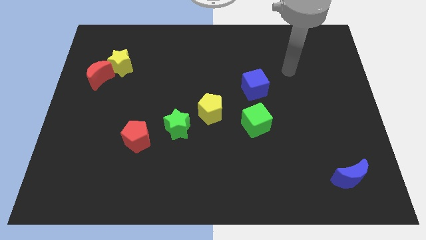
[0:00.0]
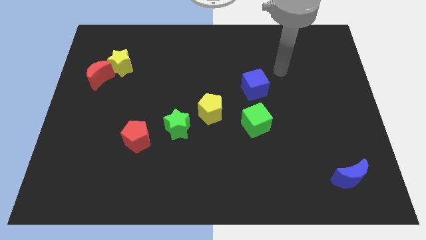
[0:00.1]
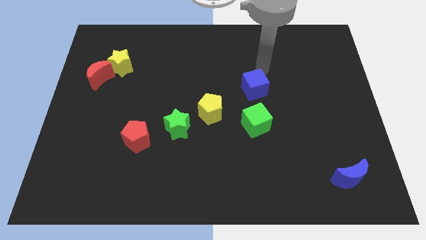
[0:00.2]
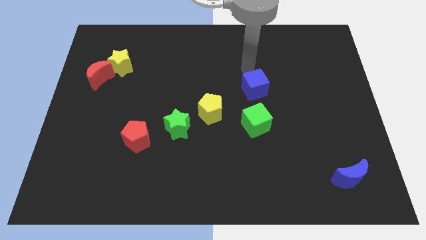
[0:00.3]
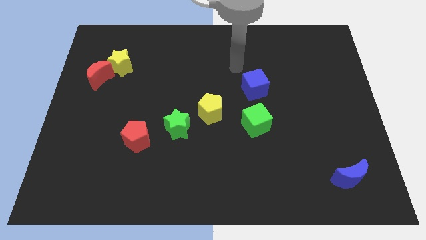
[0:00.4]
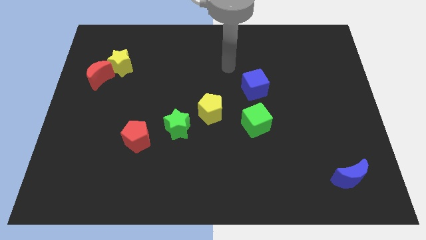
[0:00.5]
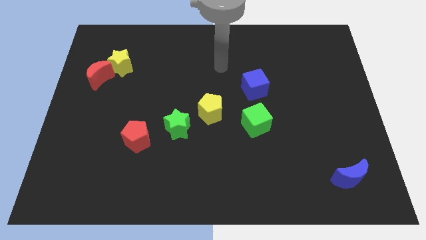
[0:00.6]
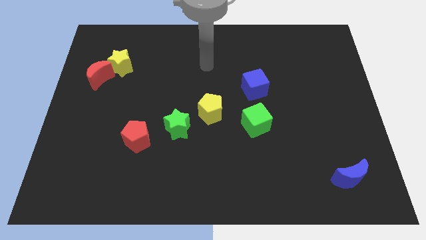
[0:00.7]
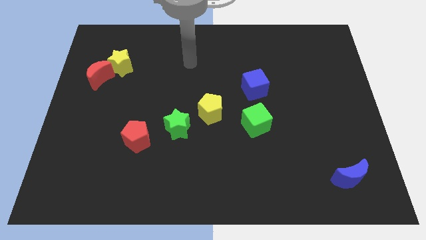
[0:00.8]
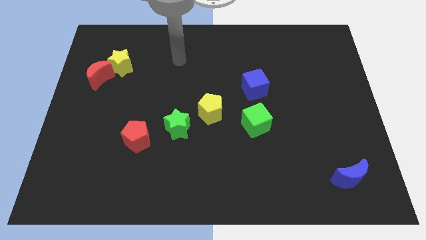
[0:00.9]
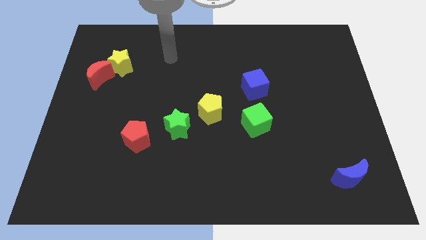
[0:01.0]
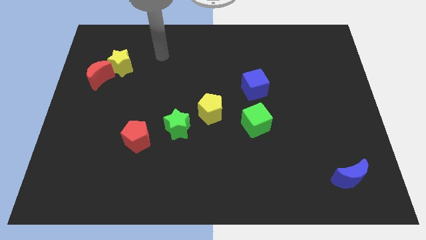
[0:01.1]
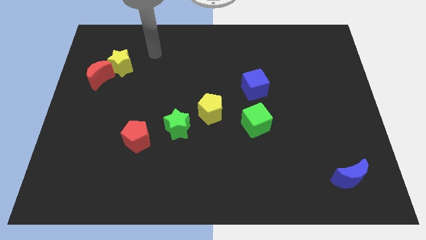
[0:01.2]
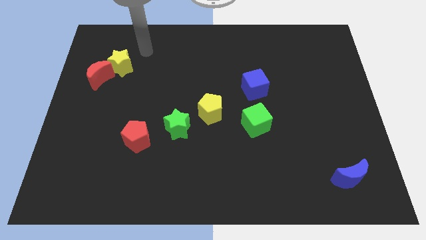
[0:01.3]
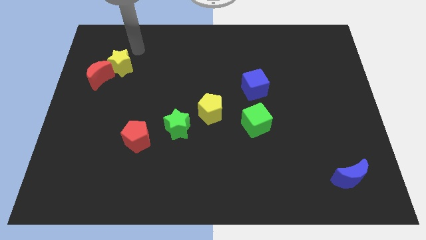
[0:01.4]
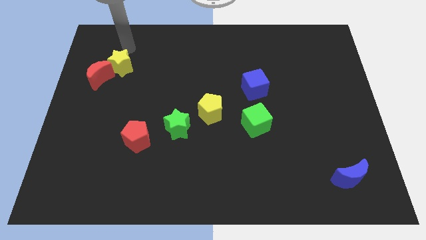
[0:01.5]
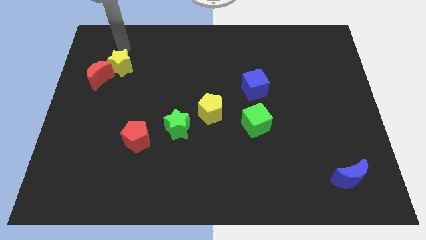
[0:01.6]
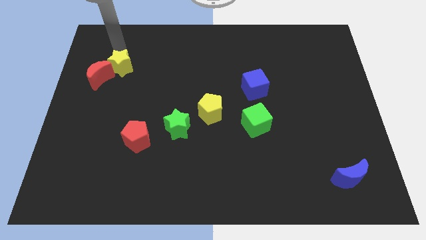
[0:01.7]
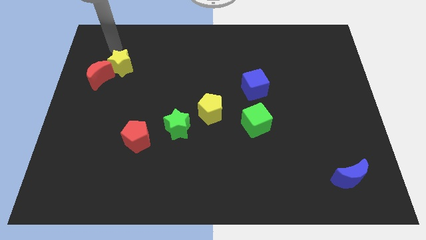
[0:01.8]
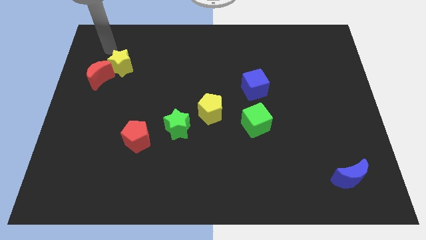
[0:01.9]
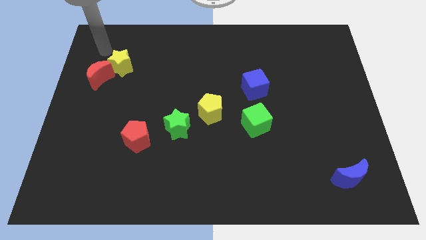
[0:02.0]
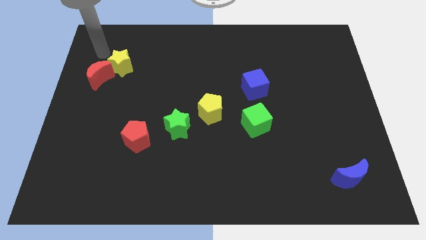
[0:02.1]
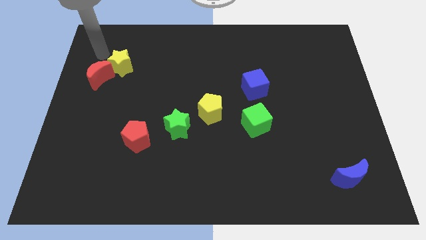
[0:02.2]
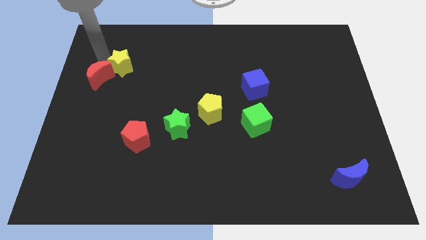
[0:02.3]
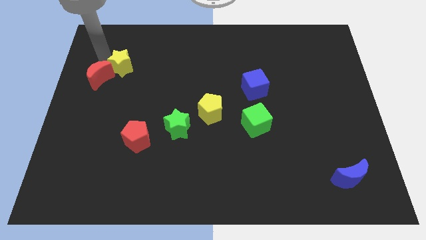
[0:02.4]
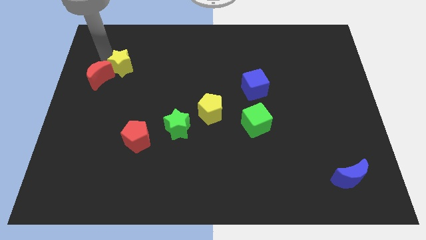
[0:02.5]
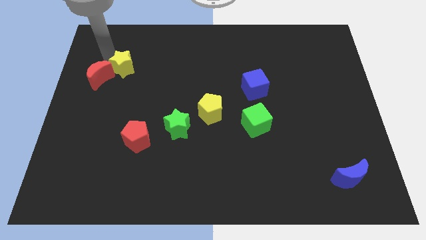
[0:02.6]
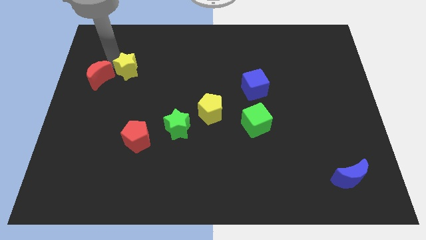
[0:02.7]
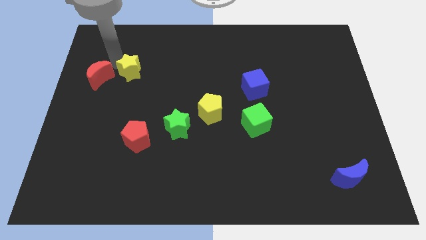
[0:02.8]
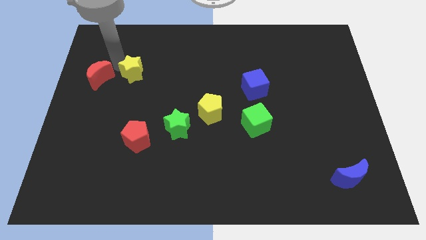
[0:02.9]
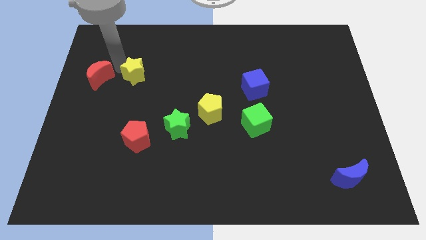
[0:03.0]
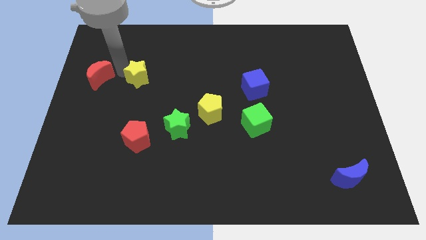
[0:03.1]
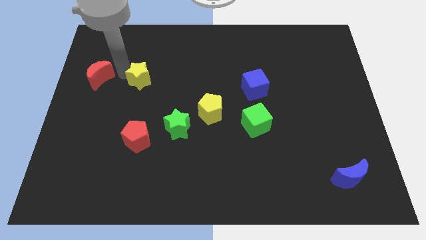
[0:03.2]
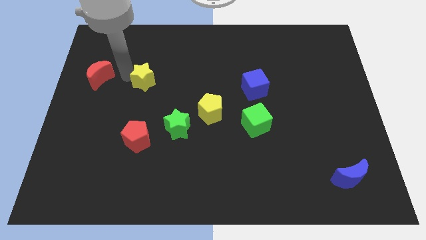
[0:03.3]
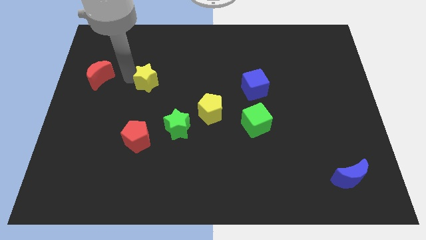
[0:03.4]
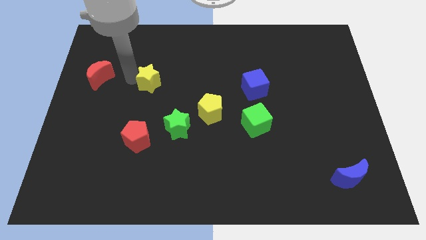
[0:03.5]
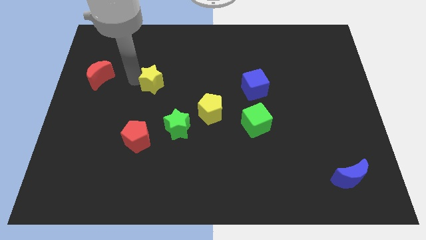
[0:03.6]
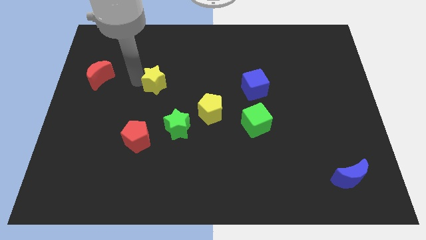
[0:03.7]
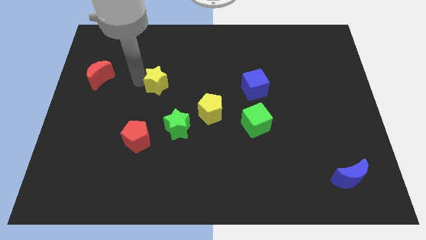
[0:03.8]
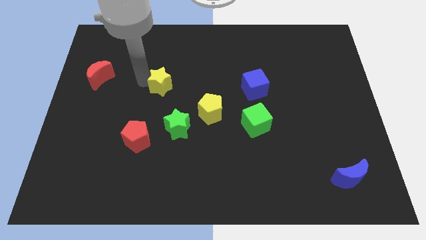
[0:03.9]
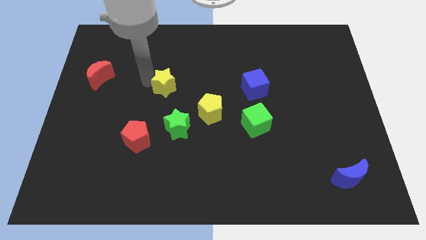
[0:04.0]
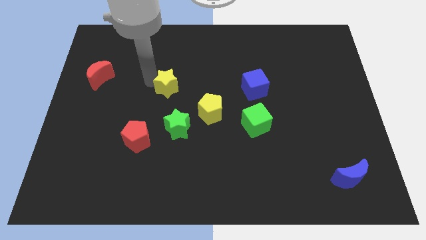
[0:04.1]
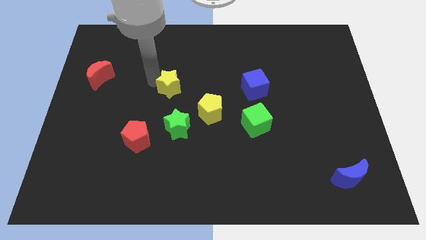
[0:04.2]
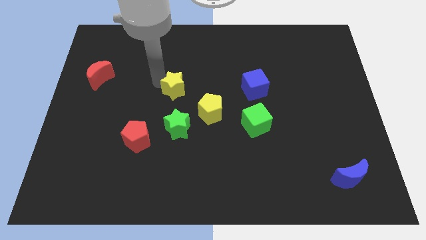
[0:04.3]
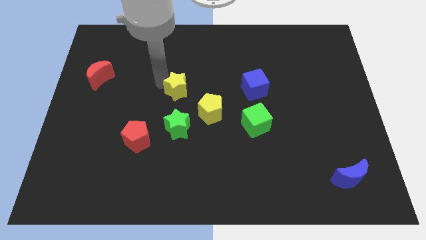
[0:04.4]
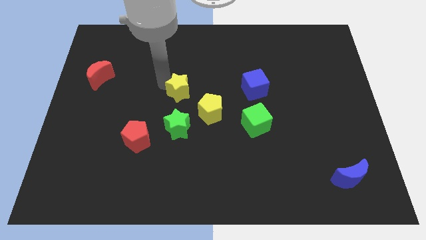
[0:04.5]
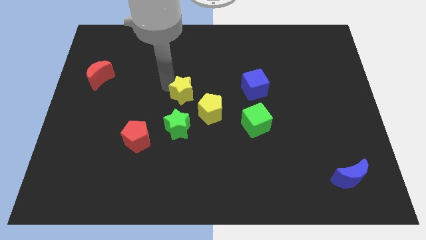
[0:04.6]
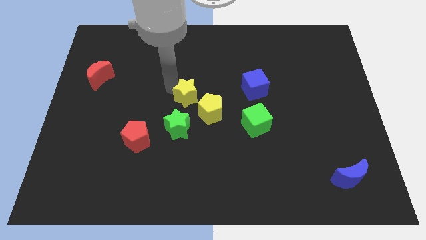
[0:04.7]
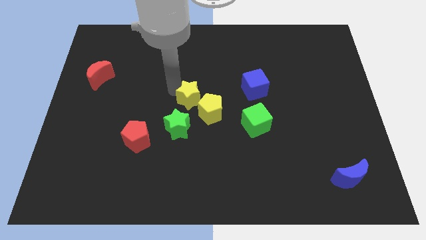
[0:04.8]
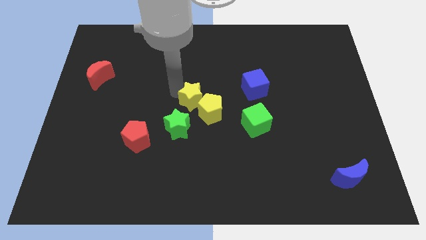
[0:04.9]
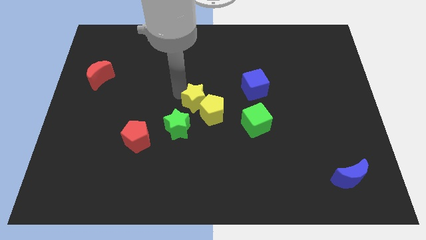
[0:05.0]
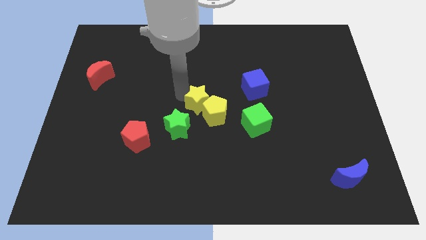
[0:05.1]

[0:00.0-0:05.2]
slide the yellow star close to the yellow pentagon

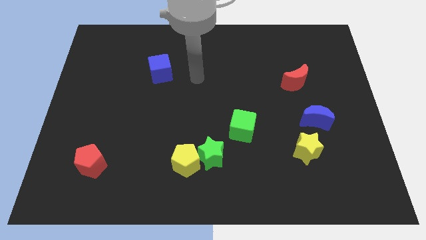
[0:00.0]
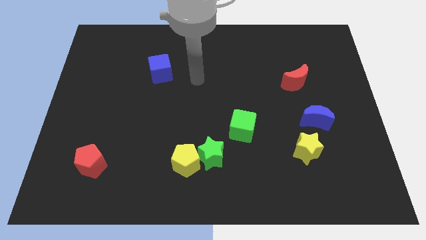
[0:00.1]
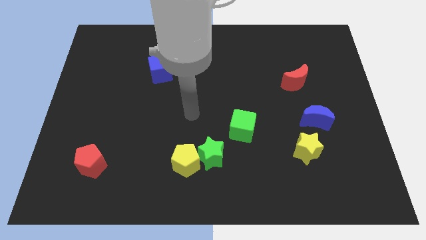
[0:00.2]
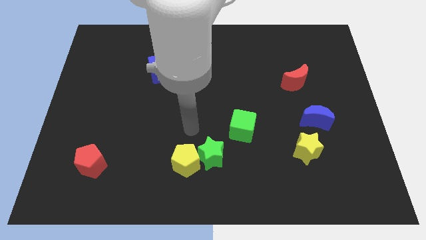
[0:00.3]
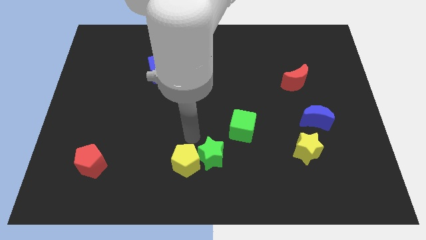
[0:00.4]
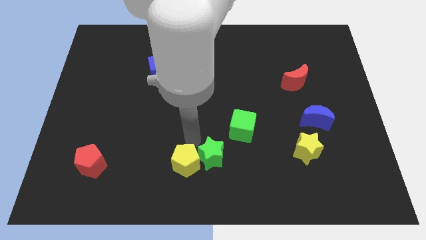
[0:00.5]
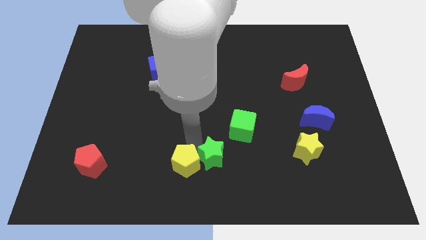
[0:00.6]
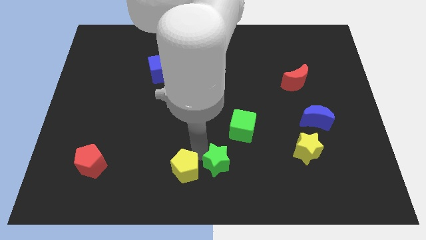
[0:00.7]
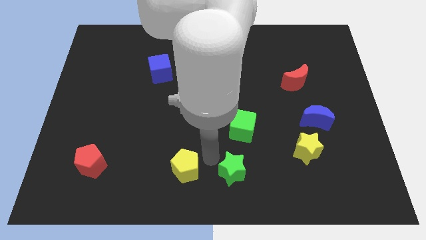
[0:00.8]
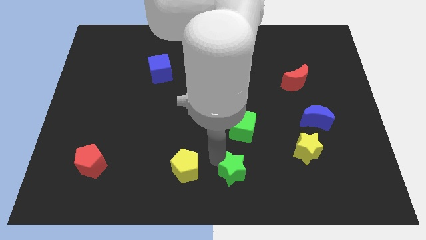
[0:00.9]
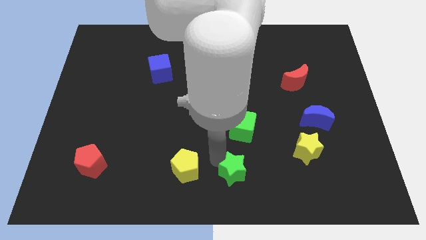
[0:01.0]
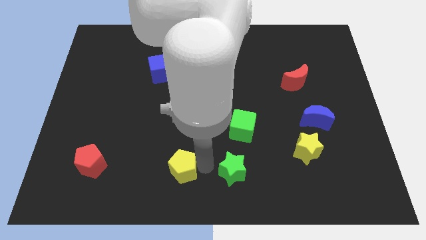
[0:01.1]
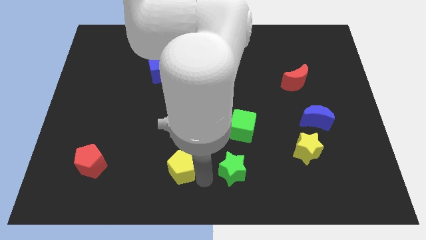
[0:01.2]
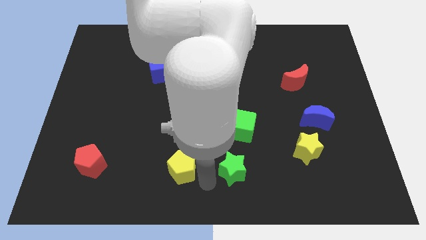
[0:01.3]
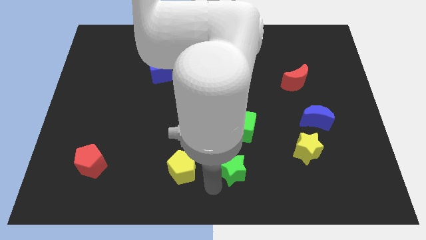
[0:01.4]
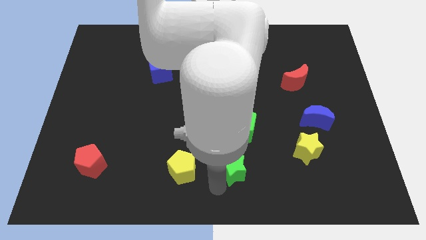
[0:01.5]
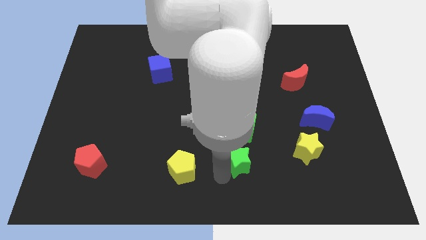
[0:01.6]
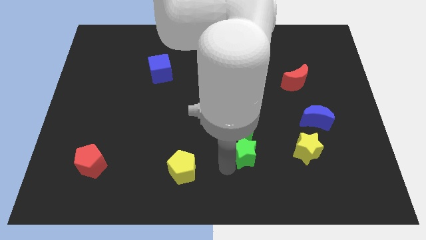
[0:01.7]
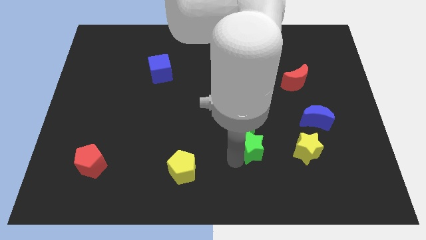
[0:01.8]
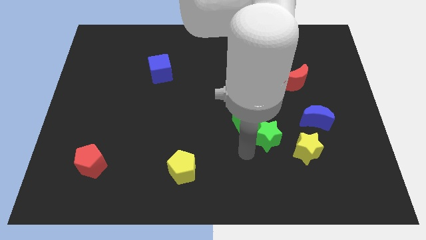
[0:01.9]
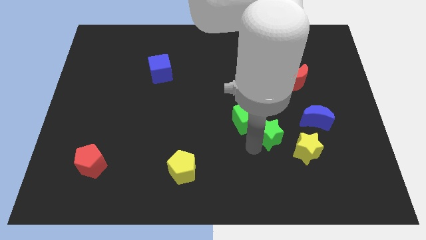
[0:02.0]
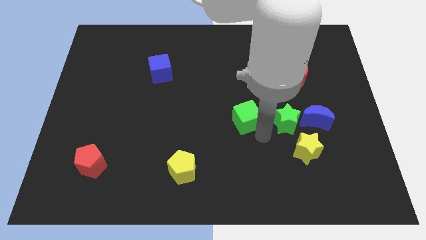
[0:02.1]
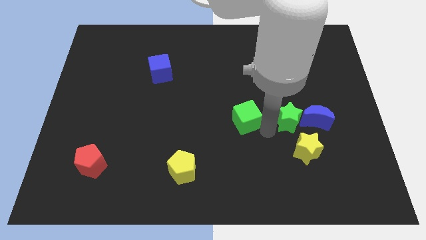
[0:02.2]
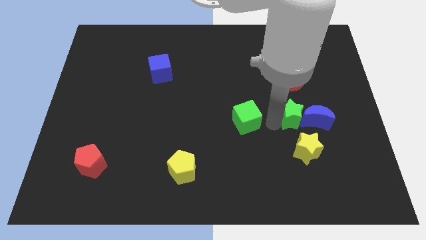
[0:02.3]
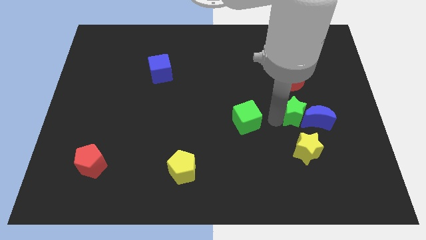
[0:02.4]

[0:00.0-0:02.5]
slide the green star next to the blue moon

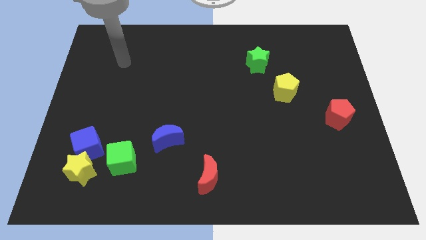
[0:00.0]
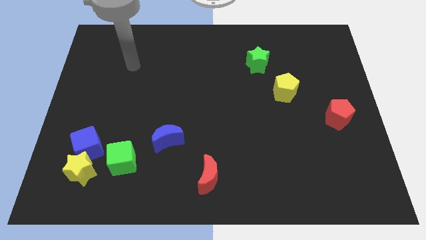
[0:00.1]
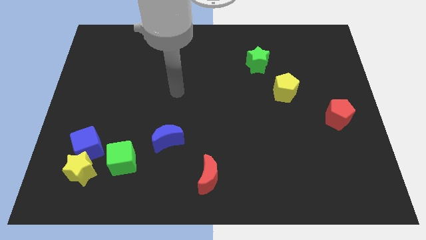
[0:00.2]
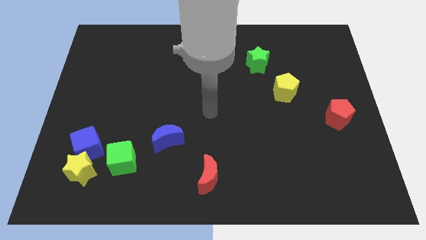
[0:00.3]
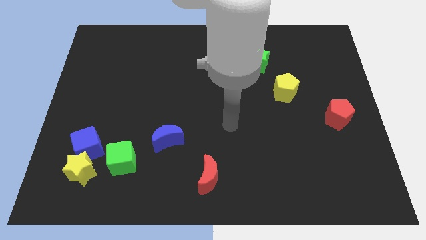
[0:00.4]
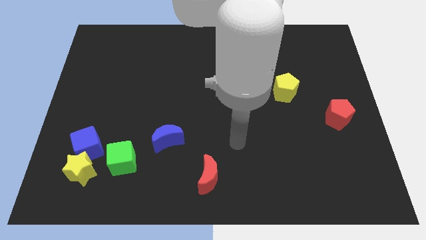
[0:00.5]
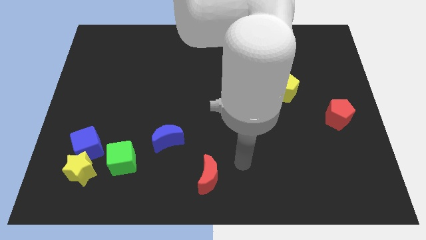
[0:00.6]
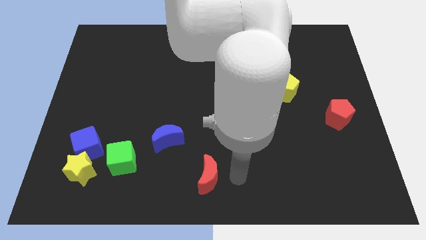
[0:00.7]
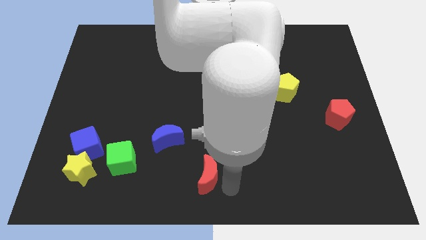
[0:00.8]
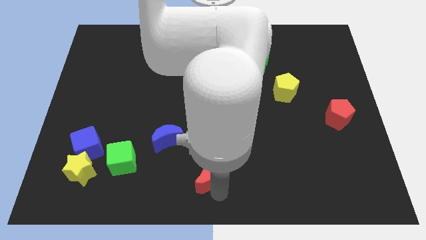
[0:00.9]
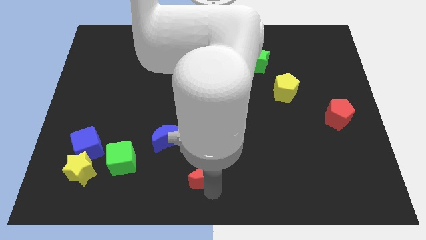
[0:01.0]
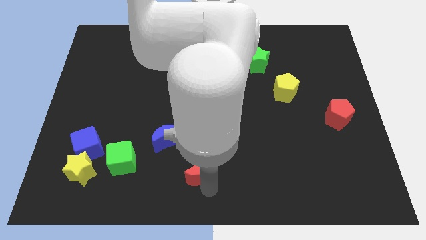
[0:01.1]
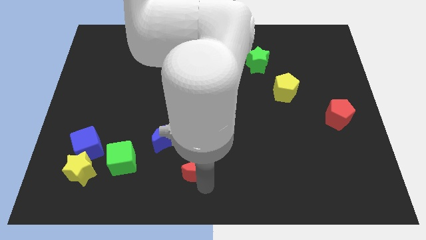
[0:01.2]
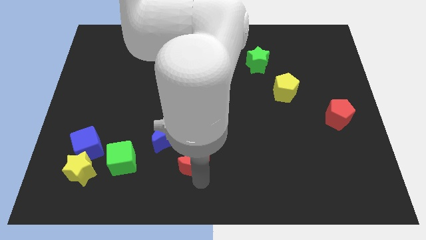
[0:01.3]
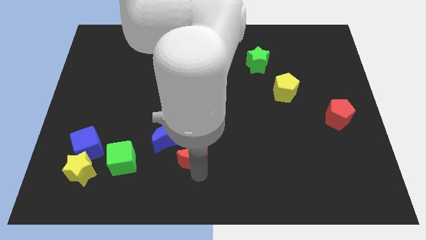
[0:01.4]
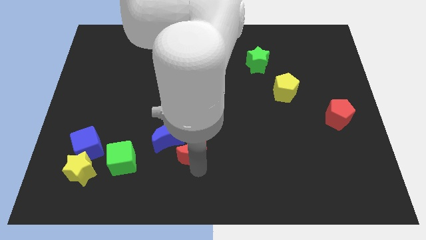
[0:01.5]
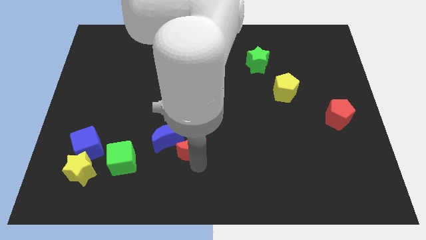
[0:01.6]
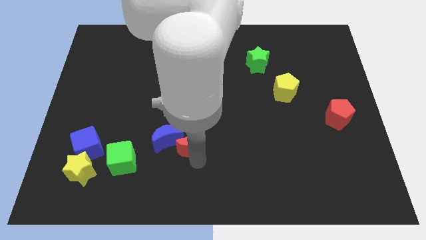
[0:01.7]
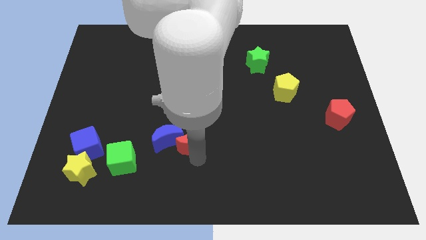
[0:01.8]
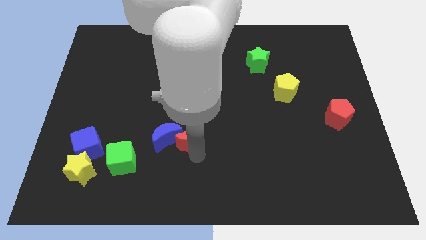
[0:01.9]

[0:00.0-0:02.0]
slide the red moon to the blue moon
